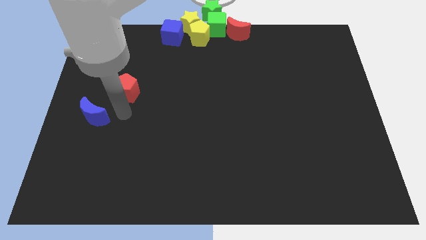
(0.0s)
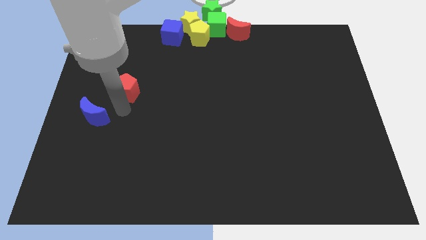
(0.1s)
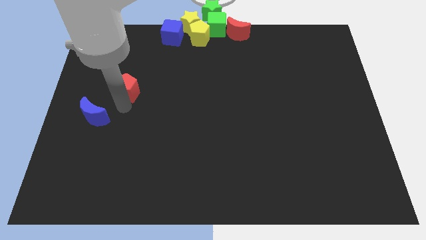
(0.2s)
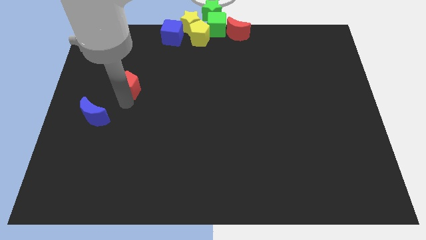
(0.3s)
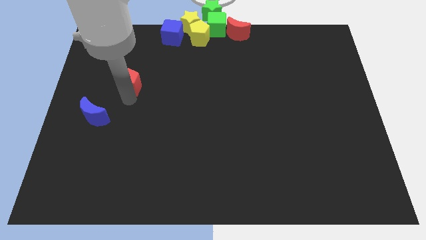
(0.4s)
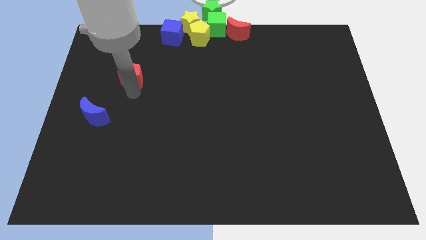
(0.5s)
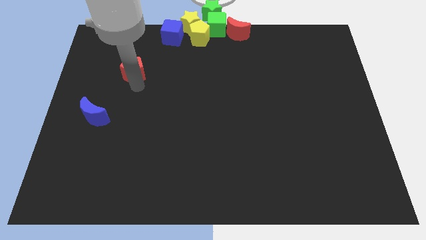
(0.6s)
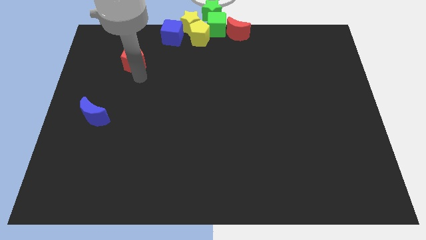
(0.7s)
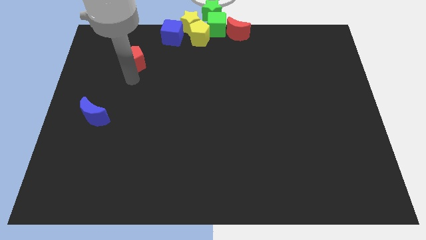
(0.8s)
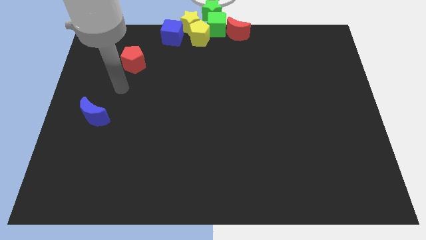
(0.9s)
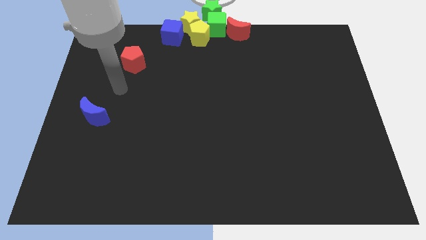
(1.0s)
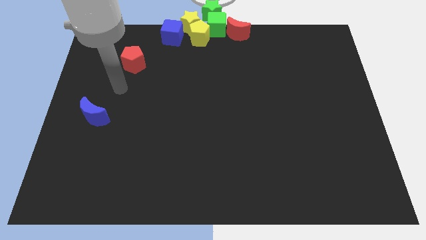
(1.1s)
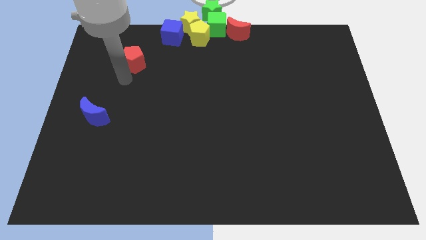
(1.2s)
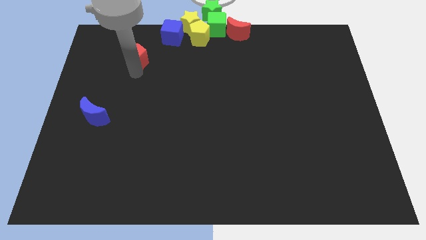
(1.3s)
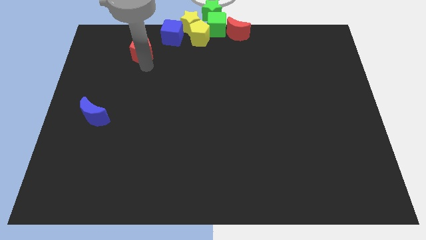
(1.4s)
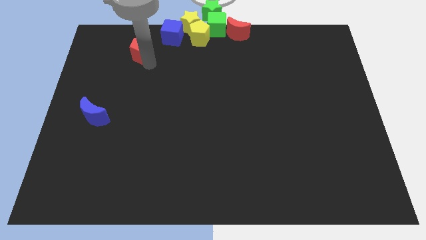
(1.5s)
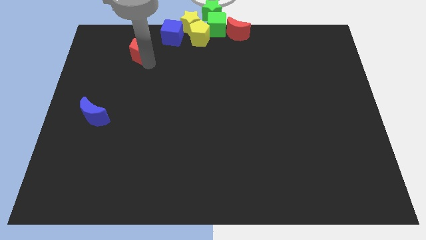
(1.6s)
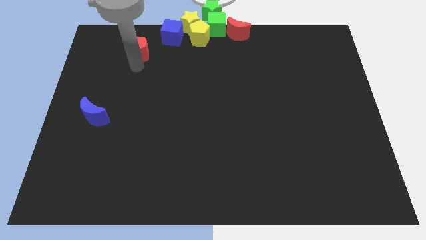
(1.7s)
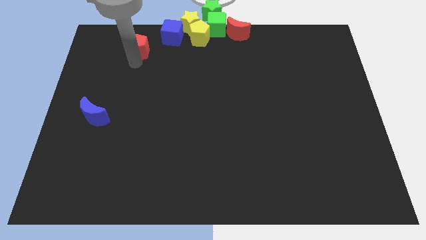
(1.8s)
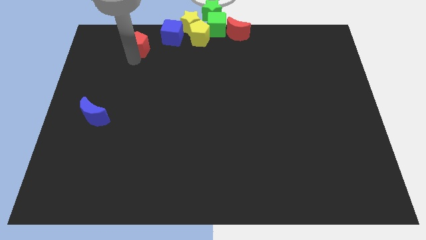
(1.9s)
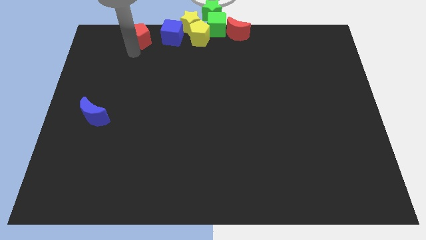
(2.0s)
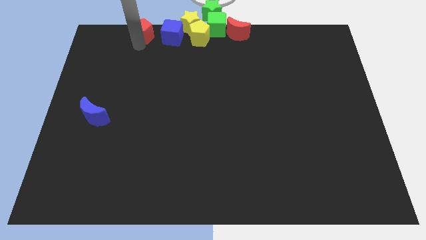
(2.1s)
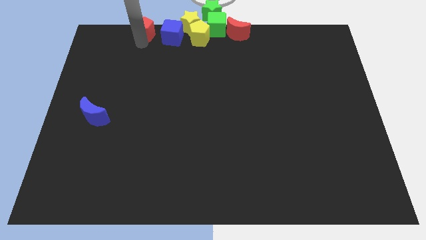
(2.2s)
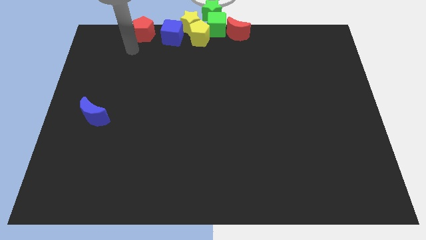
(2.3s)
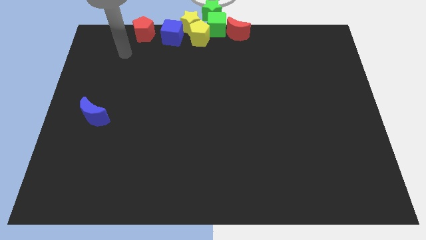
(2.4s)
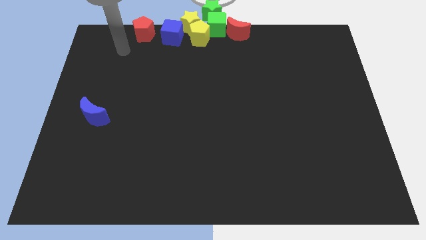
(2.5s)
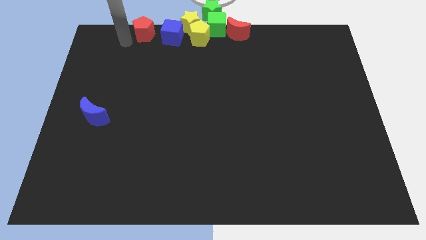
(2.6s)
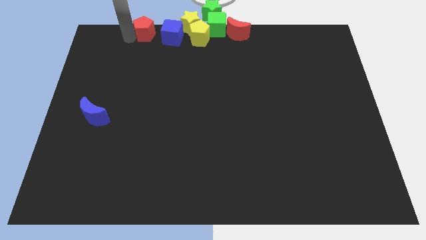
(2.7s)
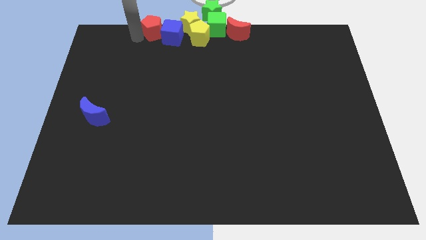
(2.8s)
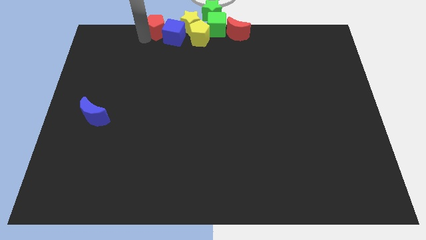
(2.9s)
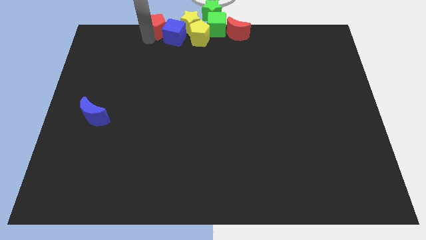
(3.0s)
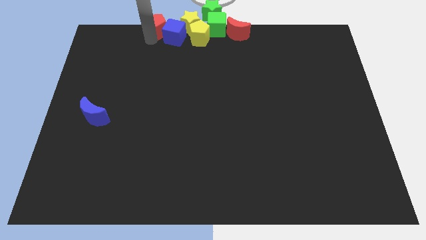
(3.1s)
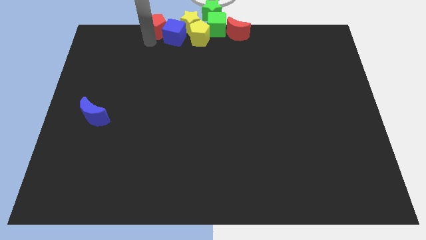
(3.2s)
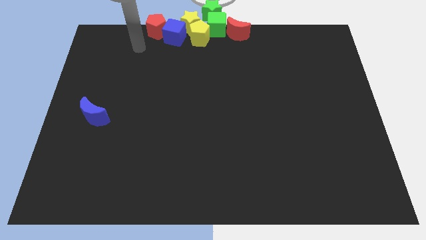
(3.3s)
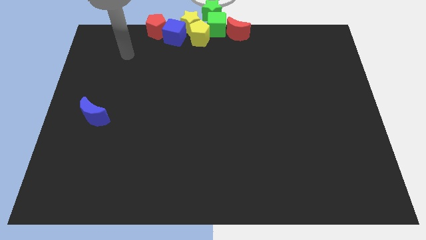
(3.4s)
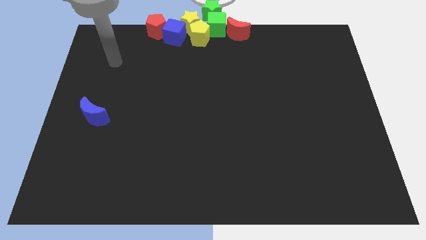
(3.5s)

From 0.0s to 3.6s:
slide the red pentagon to the top left side of the blue cube

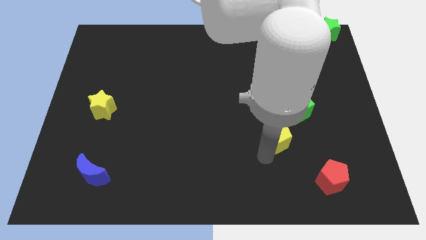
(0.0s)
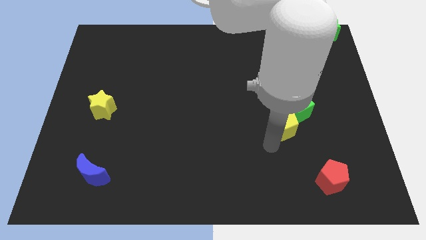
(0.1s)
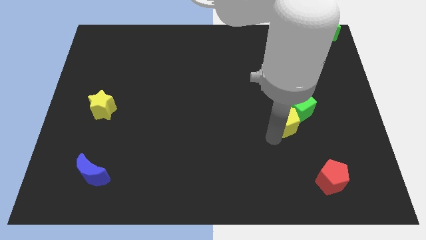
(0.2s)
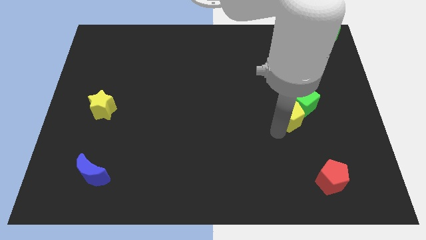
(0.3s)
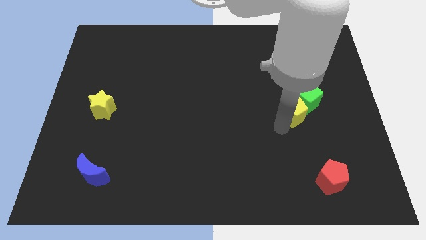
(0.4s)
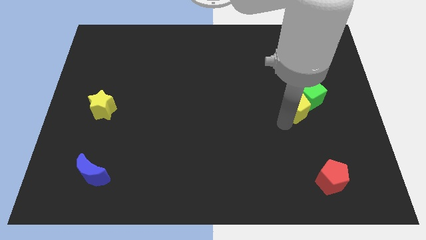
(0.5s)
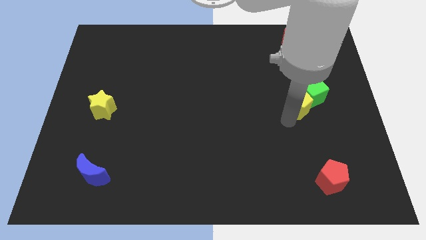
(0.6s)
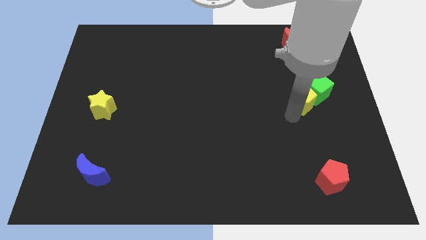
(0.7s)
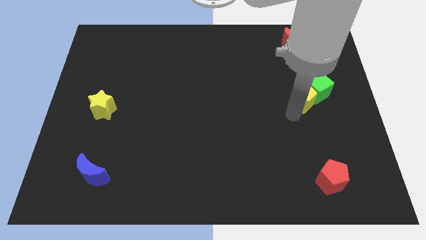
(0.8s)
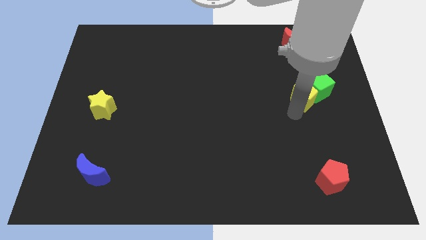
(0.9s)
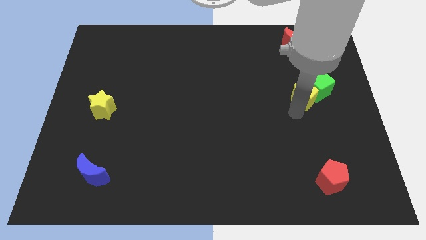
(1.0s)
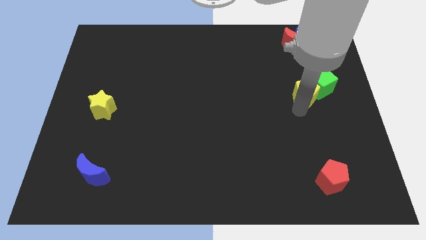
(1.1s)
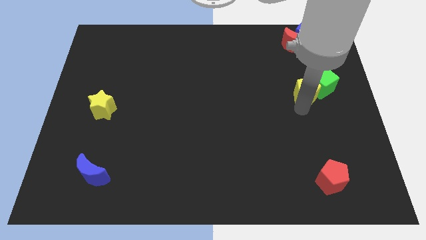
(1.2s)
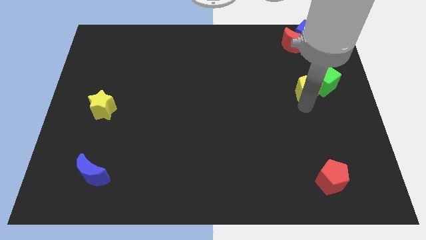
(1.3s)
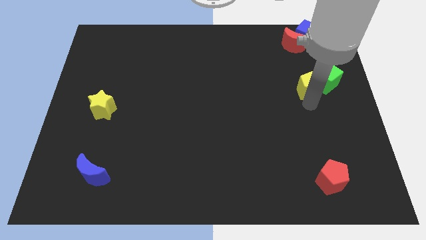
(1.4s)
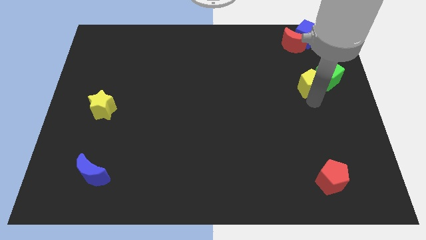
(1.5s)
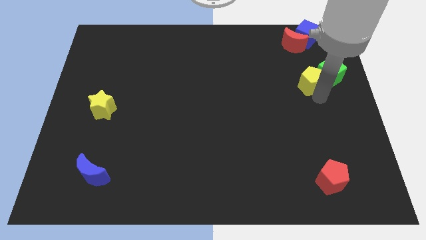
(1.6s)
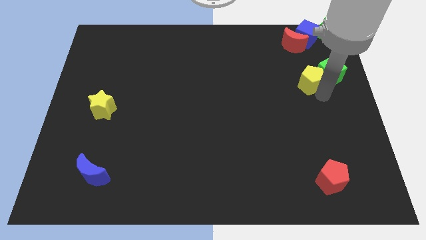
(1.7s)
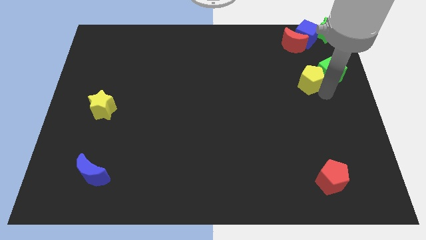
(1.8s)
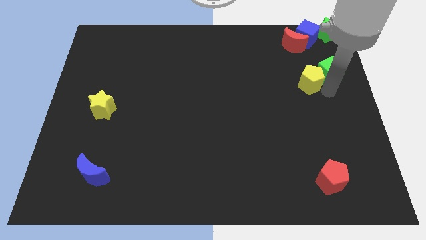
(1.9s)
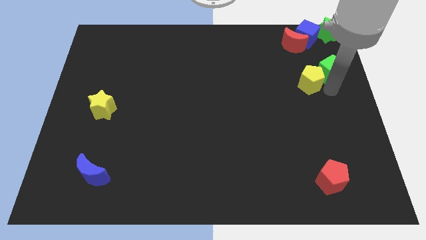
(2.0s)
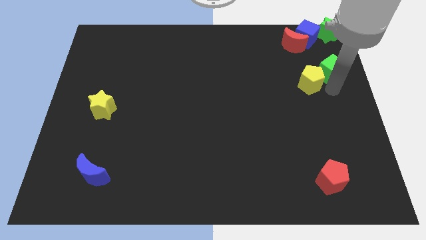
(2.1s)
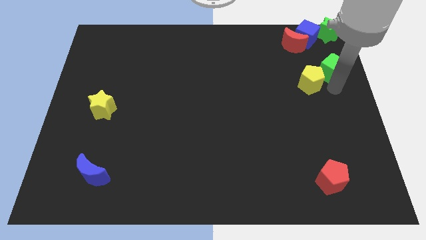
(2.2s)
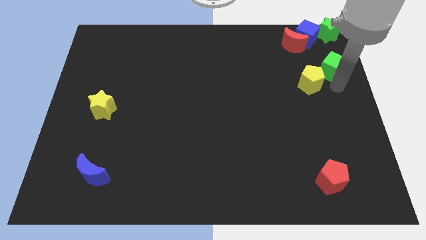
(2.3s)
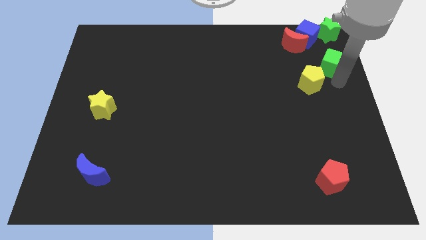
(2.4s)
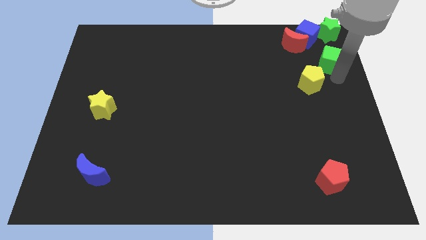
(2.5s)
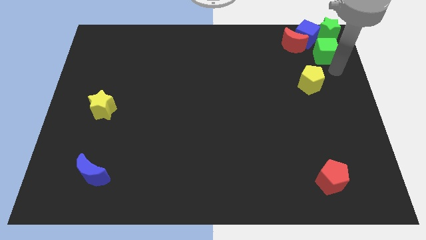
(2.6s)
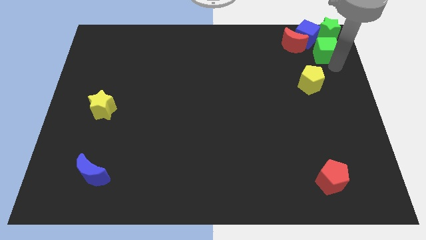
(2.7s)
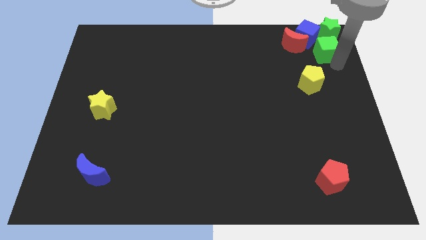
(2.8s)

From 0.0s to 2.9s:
place green cube below green star

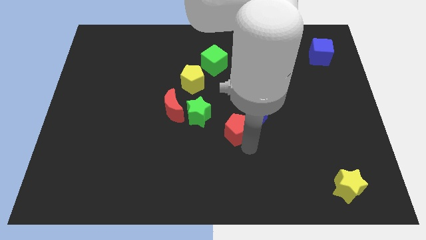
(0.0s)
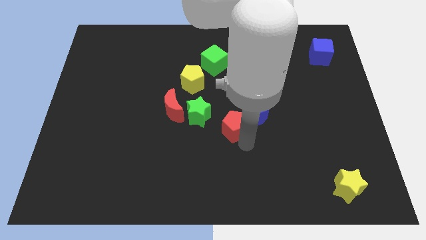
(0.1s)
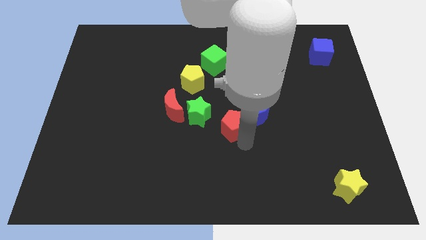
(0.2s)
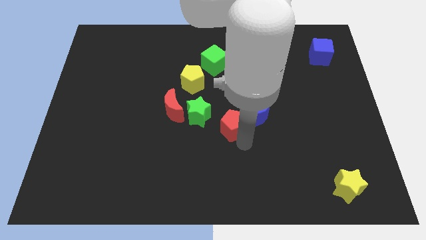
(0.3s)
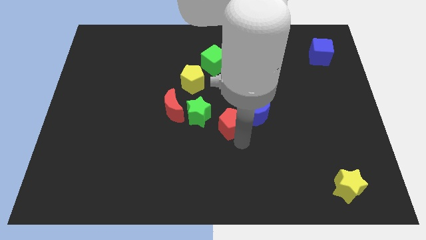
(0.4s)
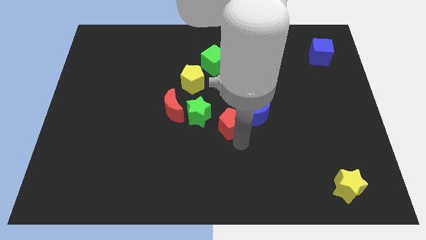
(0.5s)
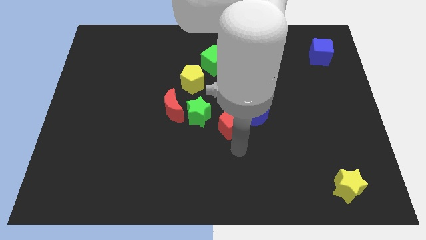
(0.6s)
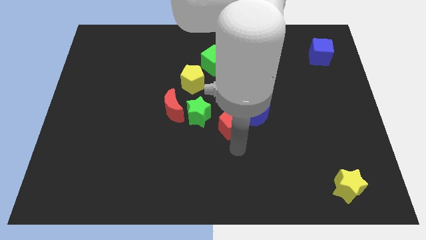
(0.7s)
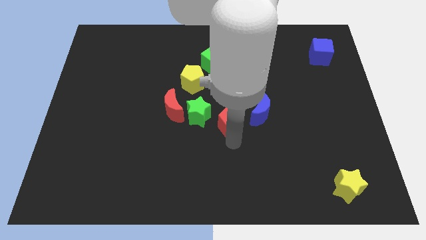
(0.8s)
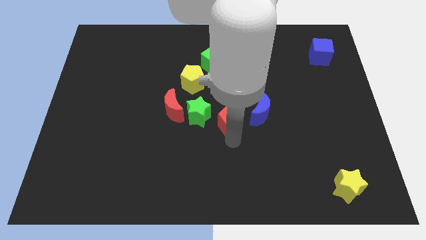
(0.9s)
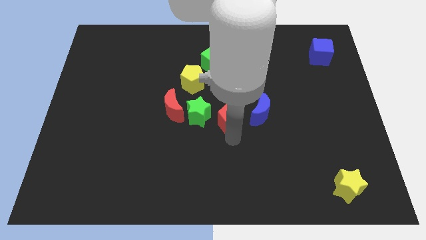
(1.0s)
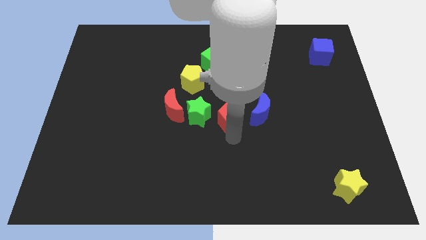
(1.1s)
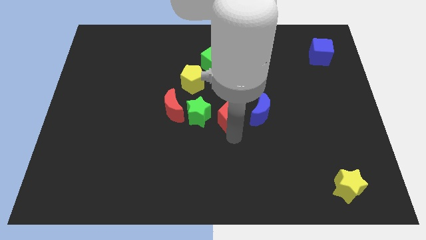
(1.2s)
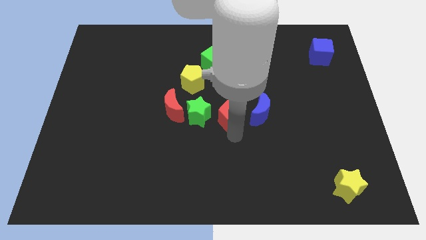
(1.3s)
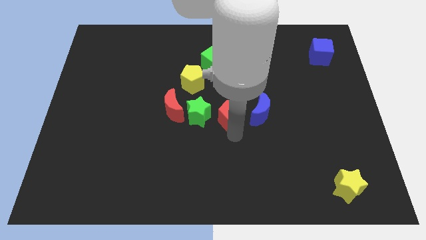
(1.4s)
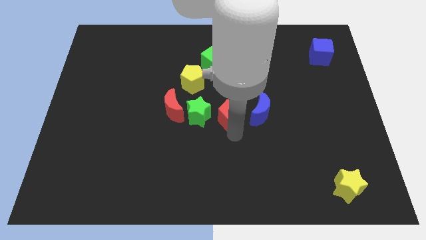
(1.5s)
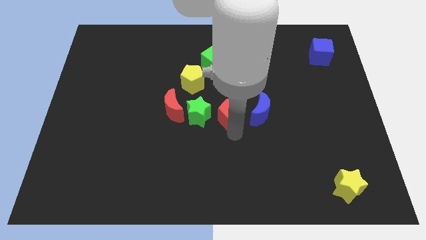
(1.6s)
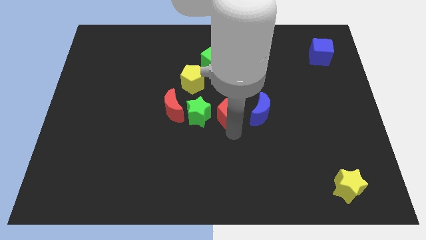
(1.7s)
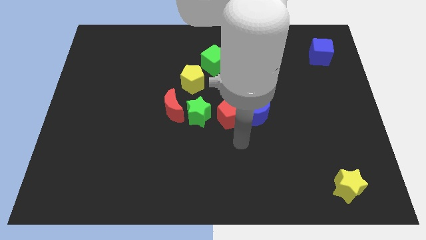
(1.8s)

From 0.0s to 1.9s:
place red pentagon beside green star

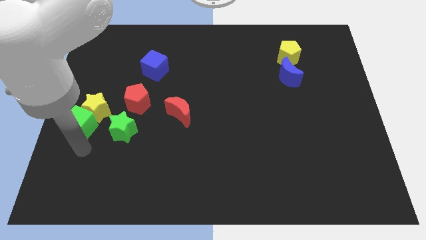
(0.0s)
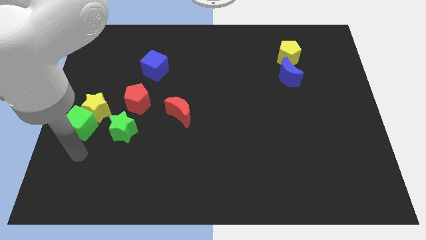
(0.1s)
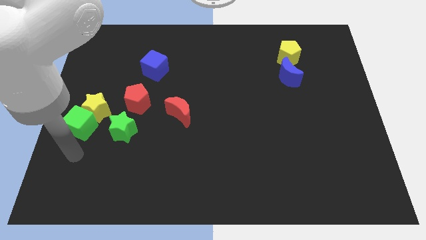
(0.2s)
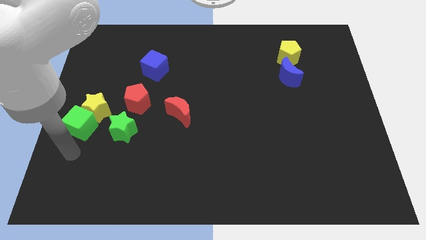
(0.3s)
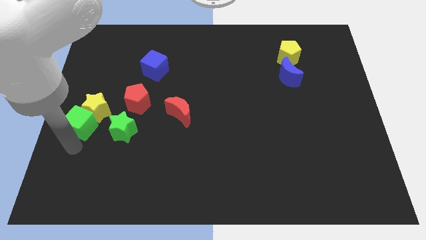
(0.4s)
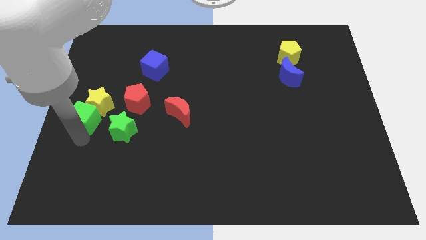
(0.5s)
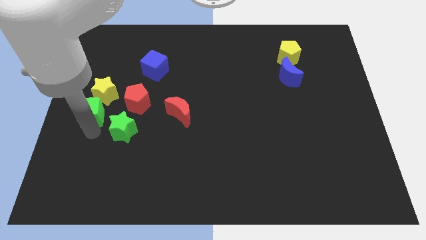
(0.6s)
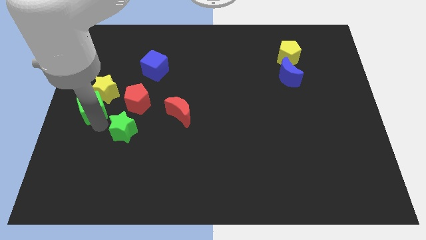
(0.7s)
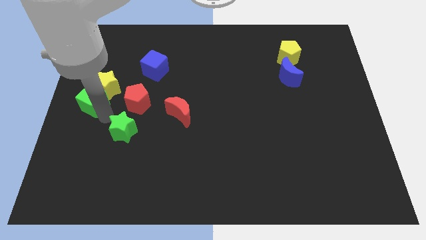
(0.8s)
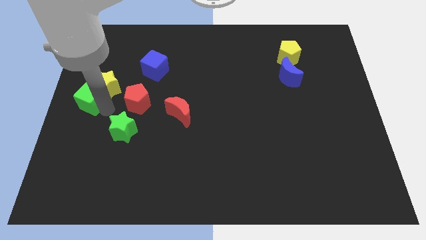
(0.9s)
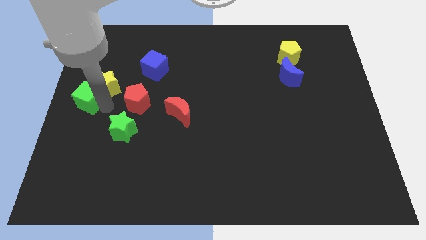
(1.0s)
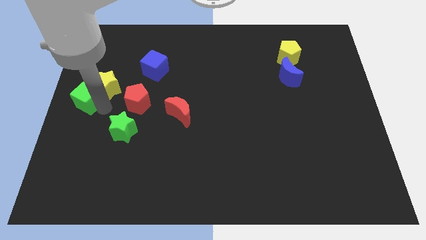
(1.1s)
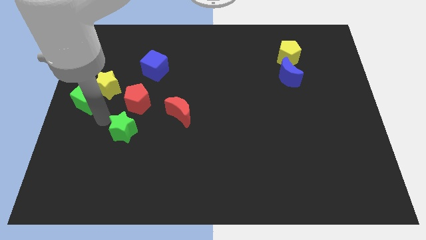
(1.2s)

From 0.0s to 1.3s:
push the green cube to the left side of the red pentagon
